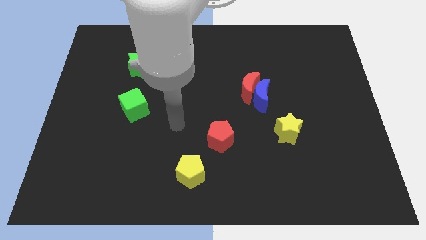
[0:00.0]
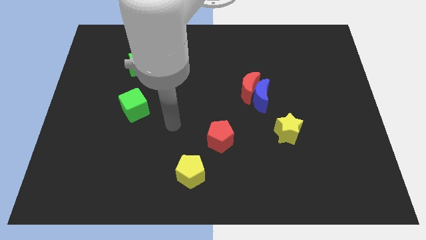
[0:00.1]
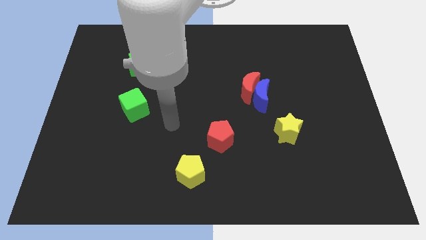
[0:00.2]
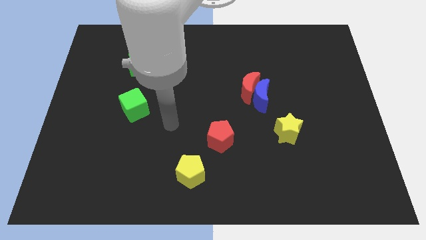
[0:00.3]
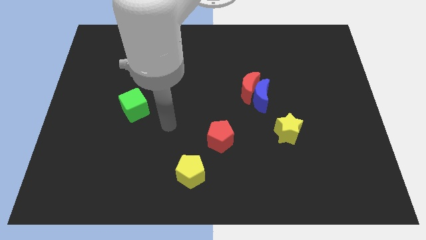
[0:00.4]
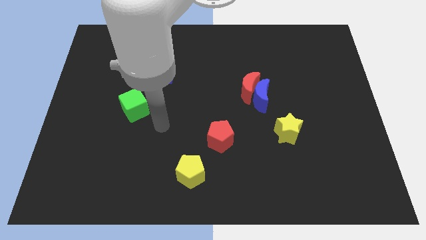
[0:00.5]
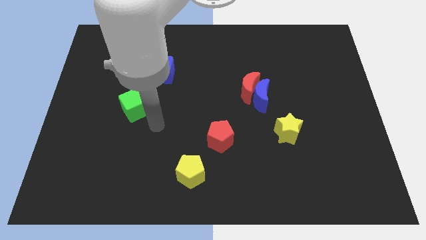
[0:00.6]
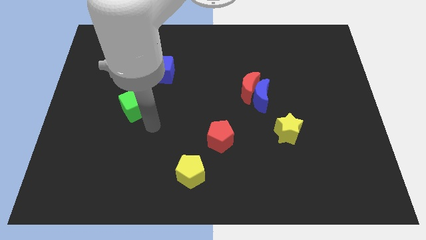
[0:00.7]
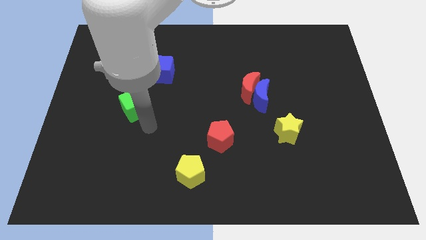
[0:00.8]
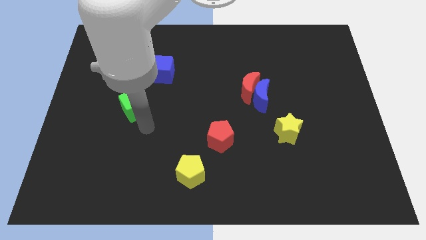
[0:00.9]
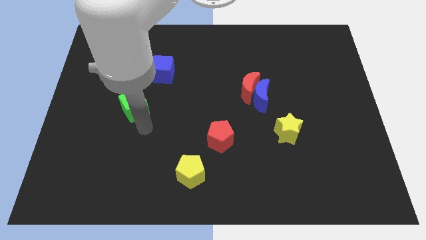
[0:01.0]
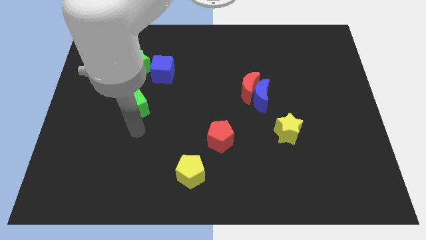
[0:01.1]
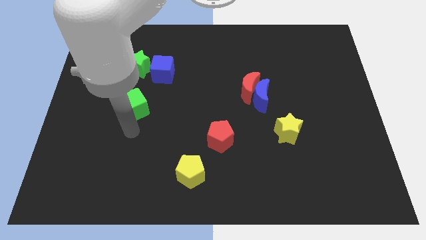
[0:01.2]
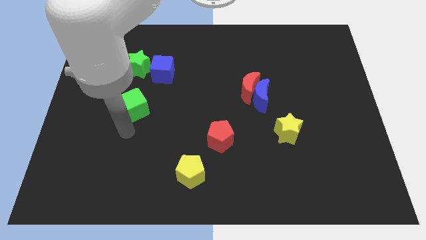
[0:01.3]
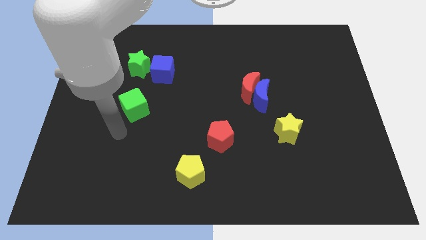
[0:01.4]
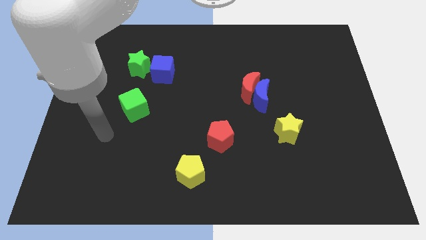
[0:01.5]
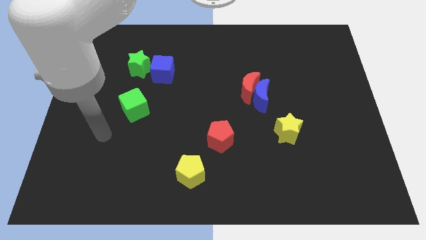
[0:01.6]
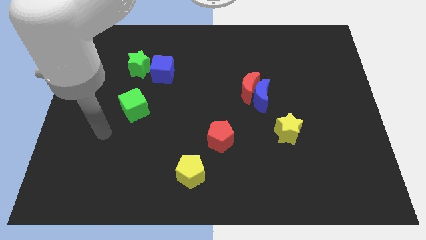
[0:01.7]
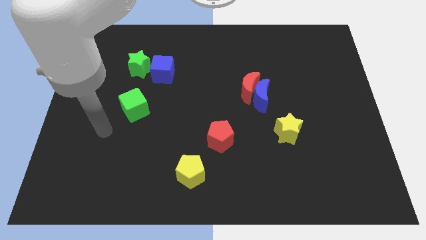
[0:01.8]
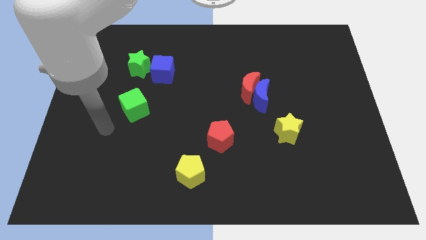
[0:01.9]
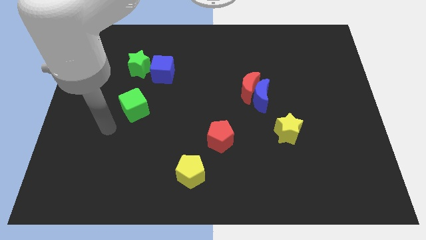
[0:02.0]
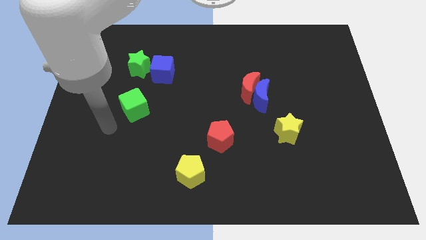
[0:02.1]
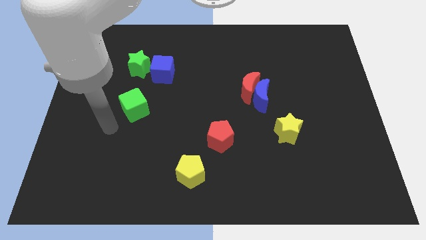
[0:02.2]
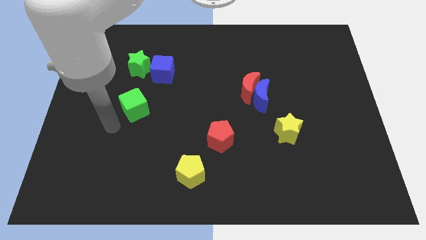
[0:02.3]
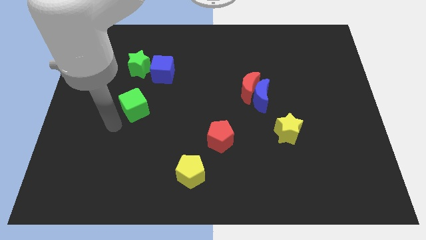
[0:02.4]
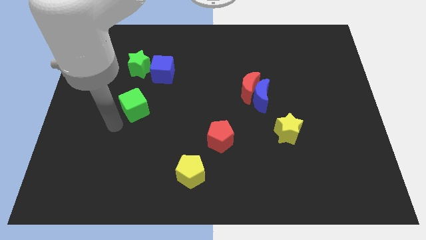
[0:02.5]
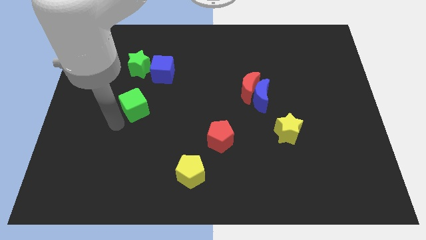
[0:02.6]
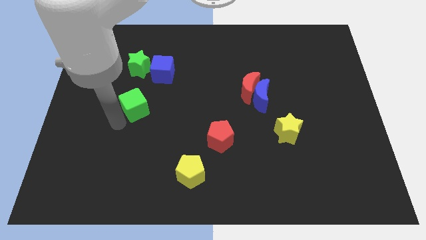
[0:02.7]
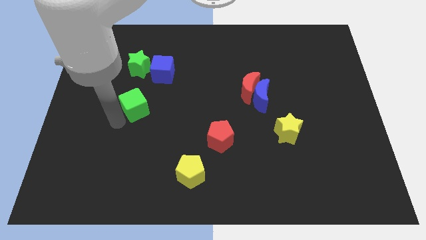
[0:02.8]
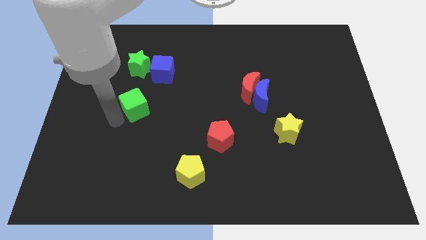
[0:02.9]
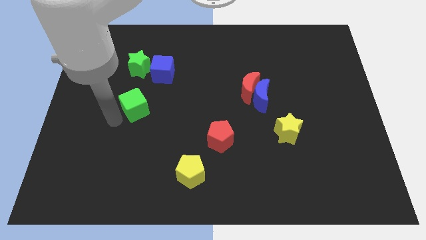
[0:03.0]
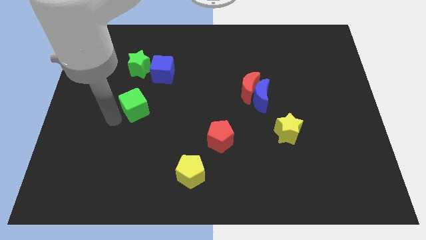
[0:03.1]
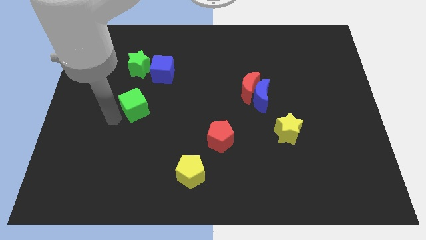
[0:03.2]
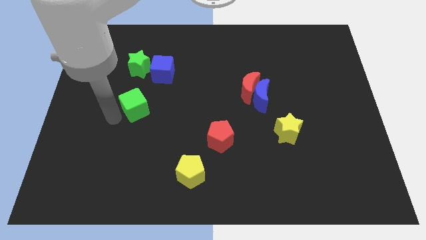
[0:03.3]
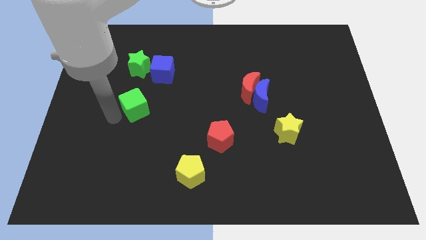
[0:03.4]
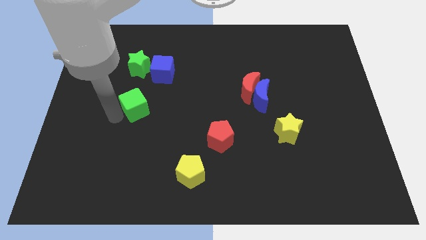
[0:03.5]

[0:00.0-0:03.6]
point your arm at the left of the green cube

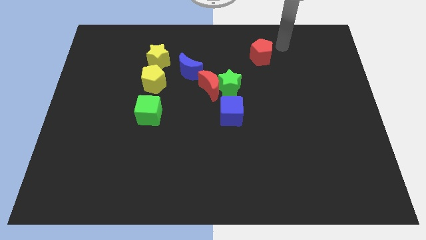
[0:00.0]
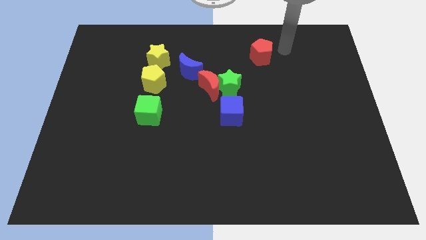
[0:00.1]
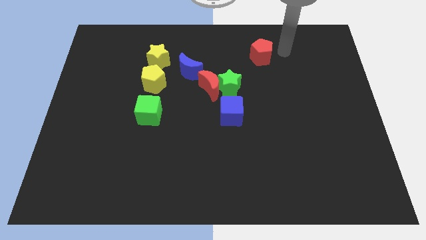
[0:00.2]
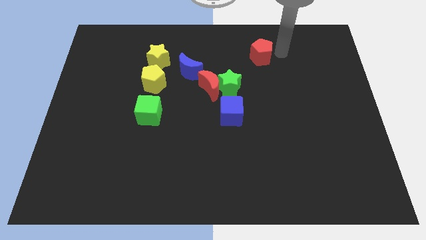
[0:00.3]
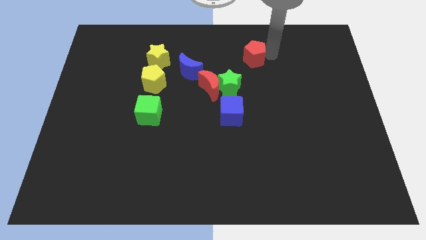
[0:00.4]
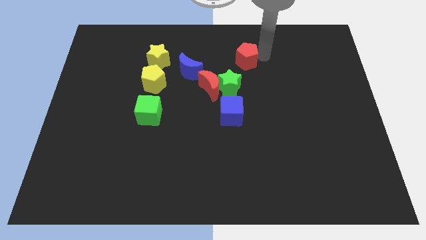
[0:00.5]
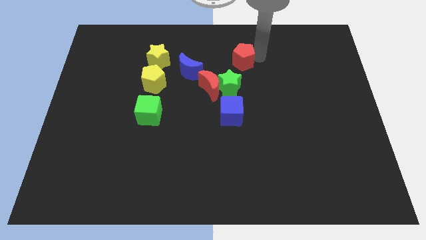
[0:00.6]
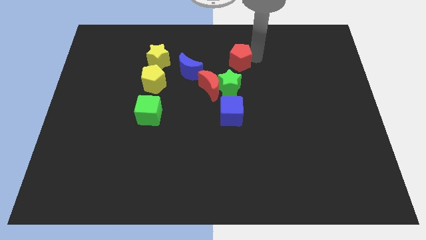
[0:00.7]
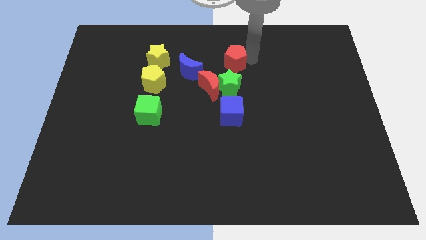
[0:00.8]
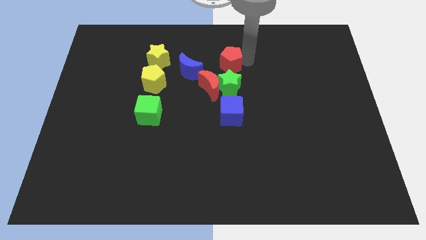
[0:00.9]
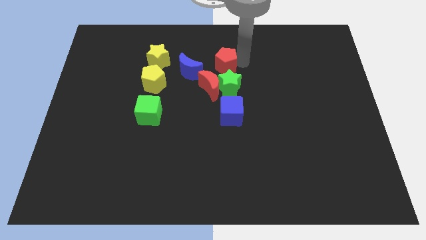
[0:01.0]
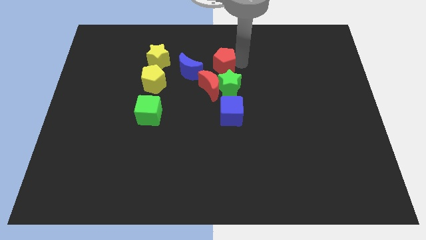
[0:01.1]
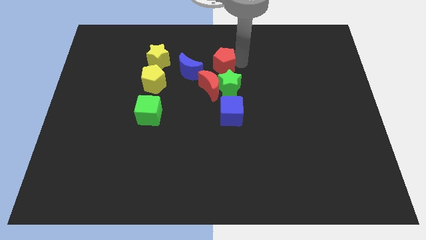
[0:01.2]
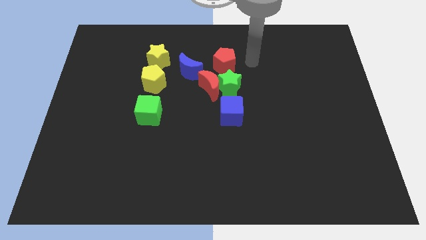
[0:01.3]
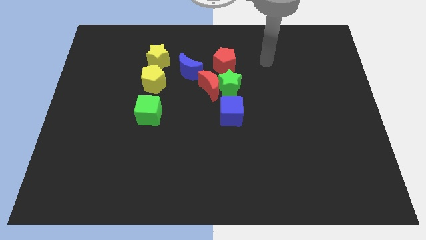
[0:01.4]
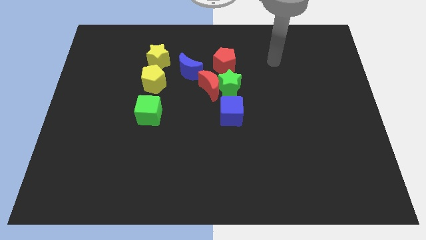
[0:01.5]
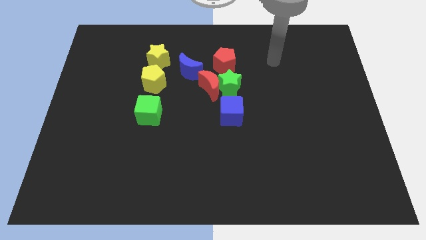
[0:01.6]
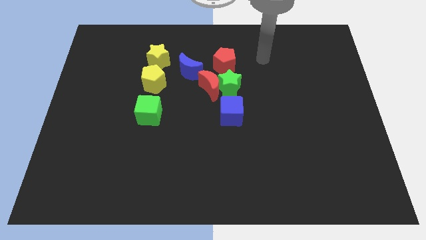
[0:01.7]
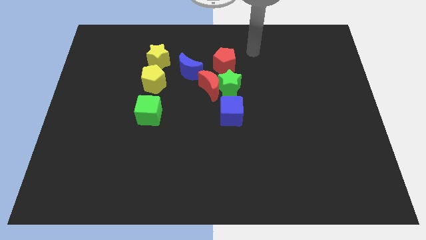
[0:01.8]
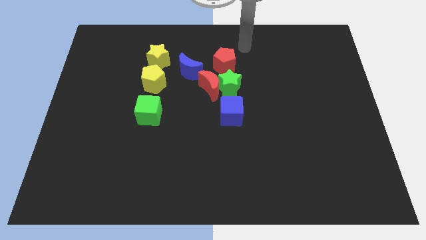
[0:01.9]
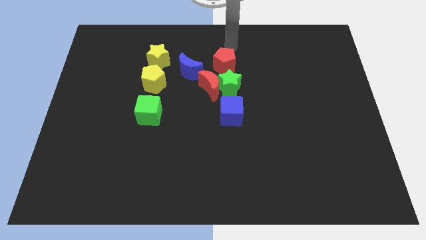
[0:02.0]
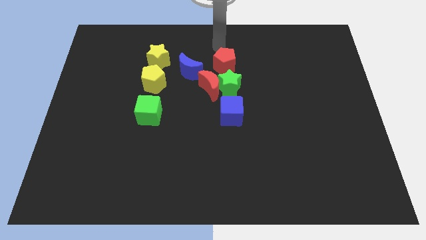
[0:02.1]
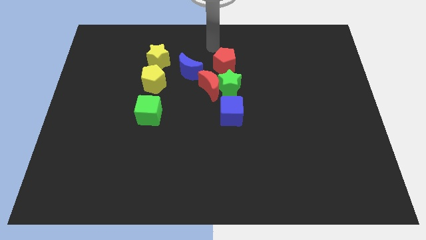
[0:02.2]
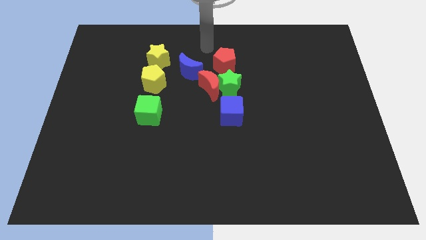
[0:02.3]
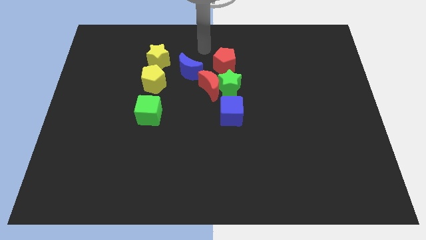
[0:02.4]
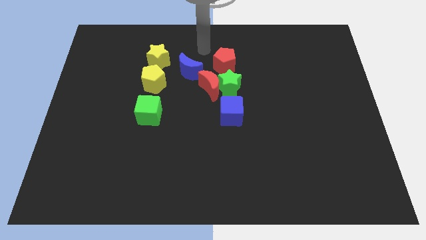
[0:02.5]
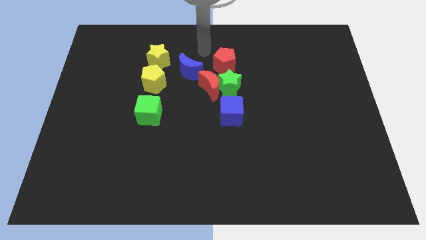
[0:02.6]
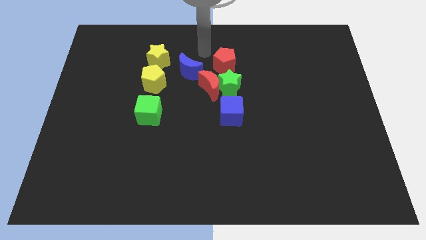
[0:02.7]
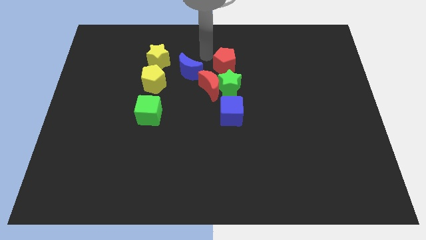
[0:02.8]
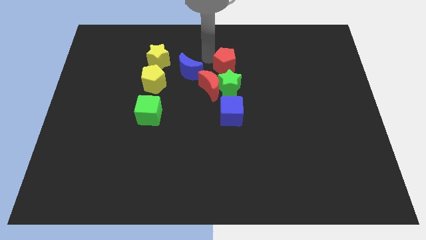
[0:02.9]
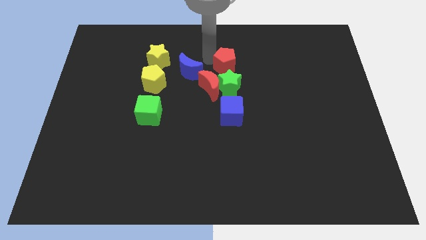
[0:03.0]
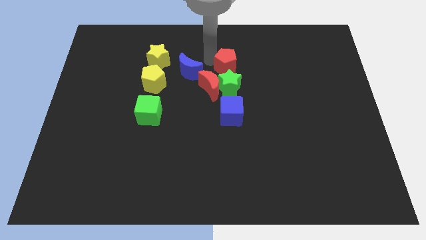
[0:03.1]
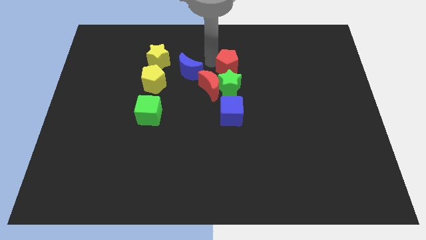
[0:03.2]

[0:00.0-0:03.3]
place the red pentagon towards the top side of the green star

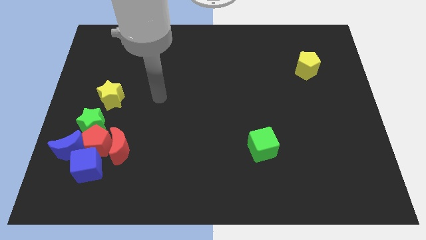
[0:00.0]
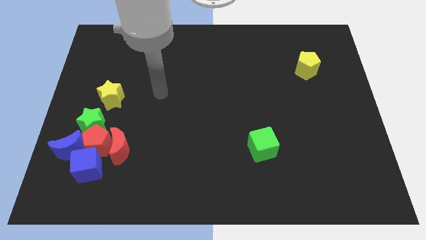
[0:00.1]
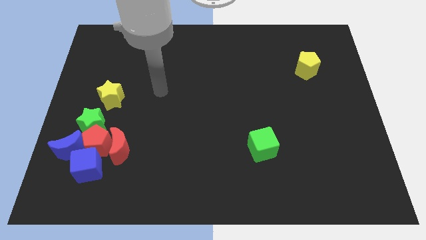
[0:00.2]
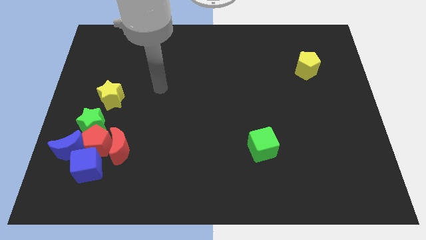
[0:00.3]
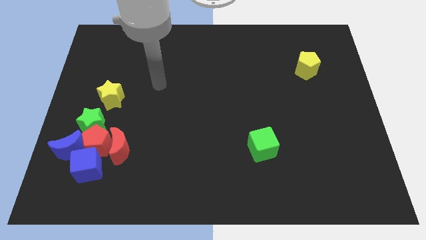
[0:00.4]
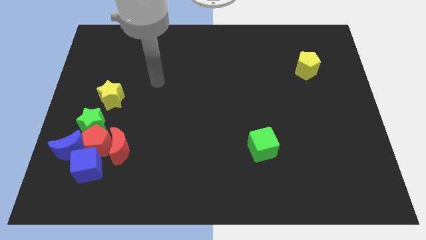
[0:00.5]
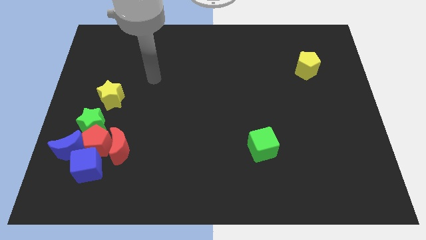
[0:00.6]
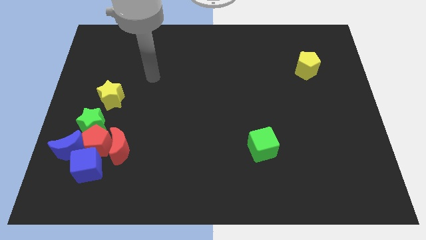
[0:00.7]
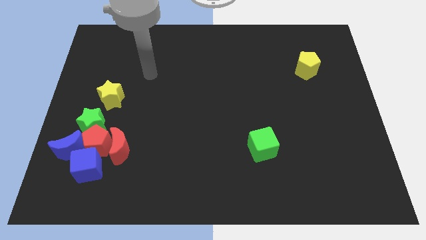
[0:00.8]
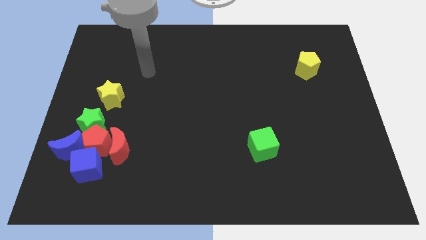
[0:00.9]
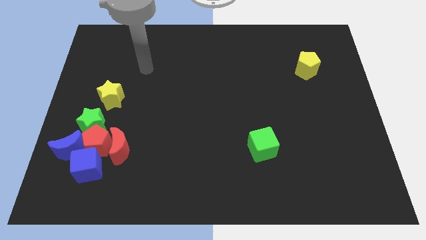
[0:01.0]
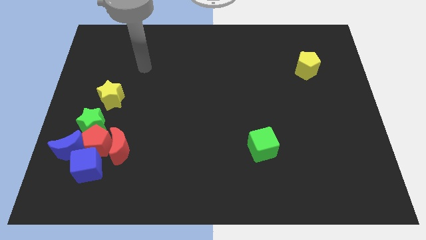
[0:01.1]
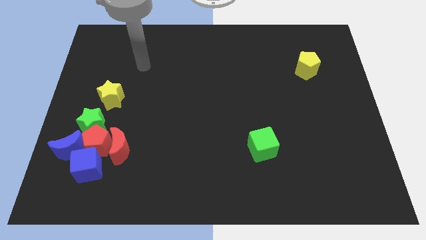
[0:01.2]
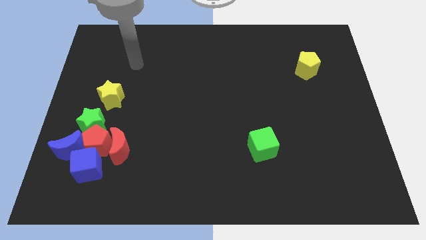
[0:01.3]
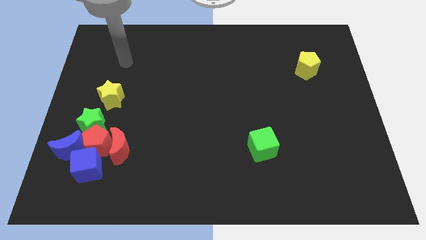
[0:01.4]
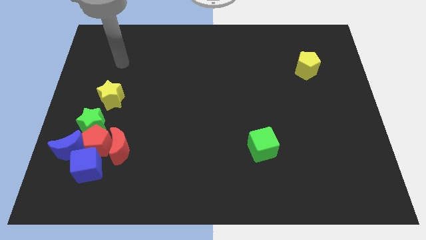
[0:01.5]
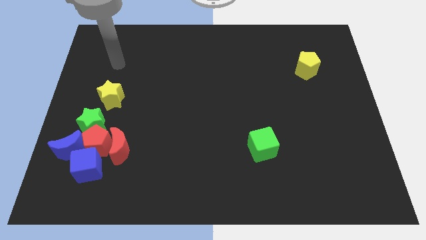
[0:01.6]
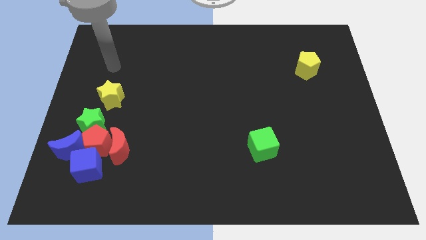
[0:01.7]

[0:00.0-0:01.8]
move your arm to the top of the yellow star

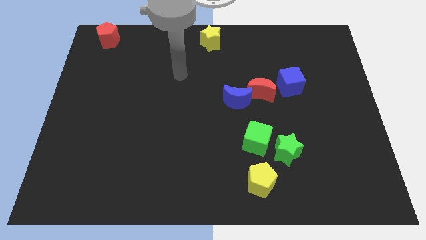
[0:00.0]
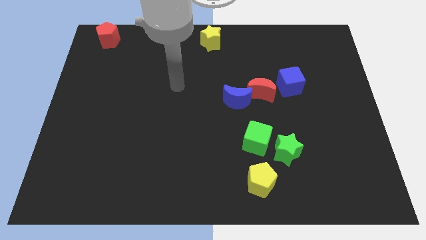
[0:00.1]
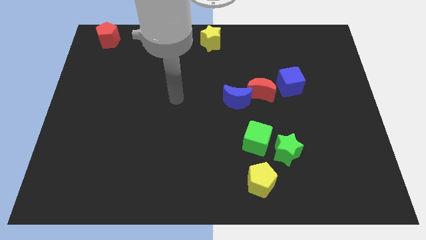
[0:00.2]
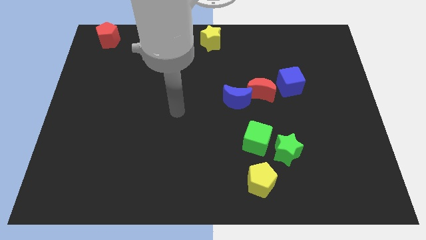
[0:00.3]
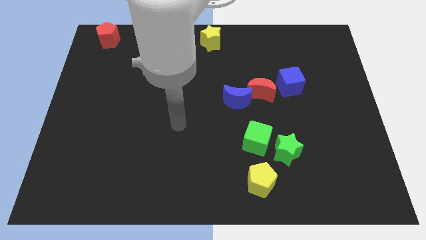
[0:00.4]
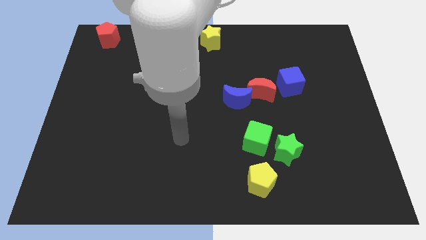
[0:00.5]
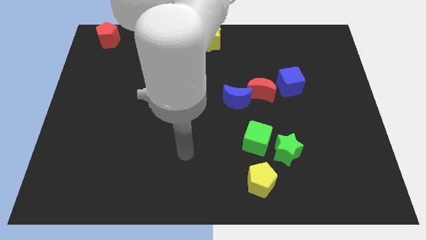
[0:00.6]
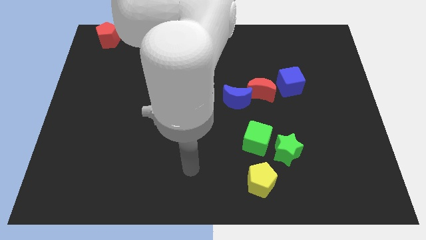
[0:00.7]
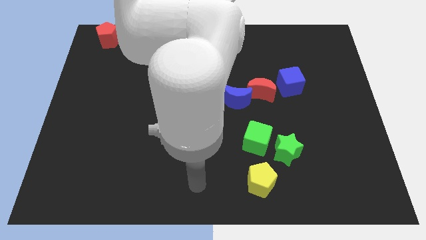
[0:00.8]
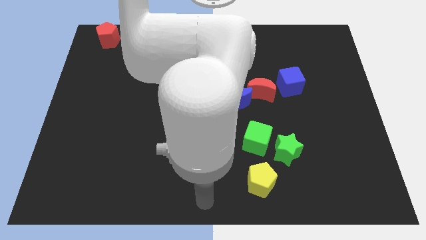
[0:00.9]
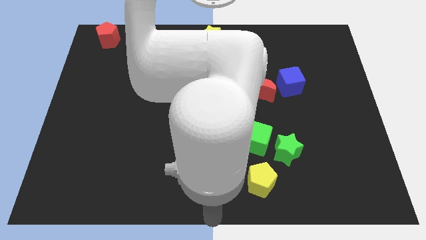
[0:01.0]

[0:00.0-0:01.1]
move yourself to the bottom center of the board
